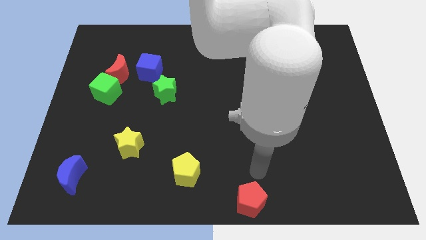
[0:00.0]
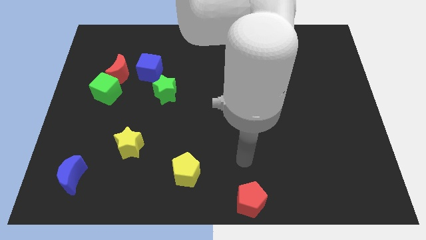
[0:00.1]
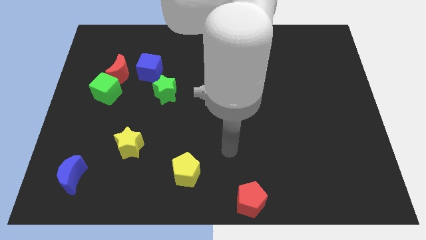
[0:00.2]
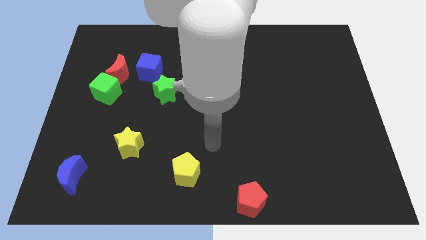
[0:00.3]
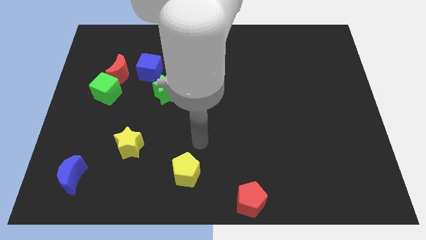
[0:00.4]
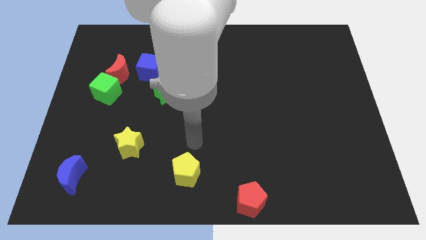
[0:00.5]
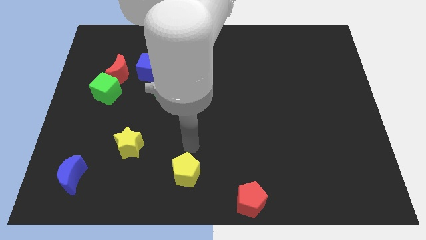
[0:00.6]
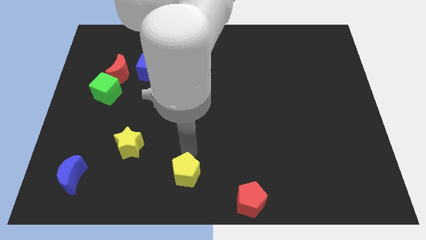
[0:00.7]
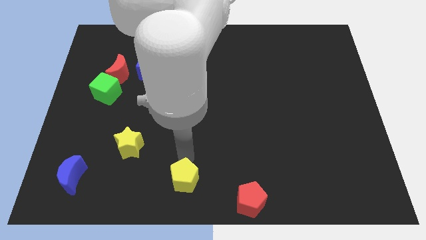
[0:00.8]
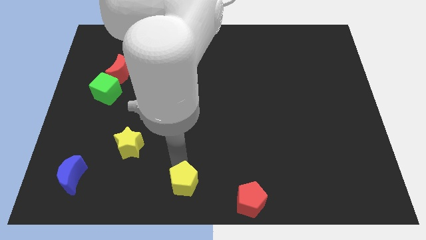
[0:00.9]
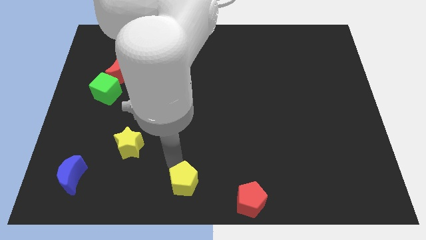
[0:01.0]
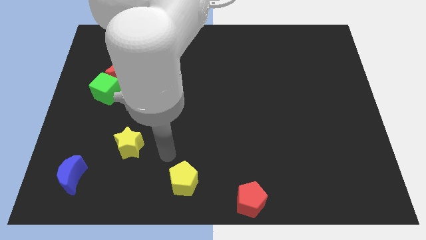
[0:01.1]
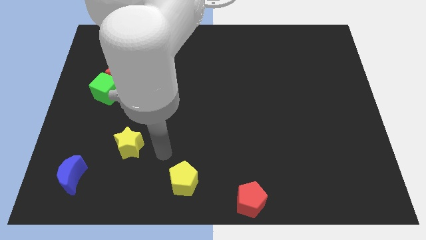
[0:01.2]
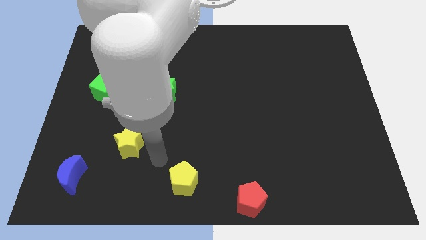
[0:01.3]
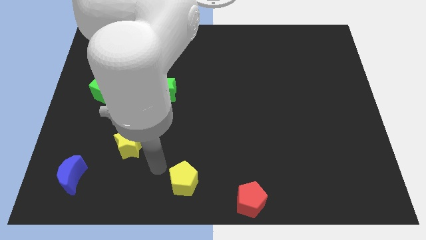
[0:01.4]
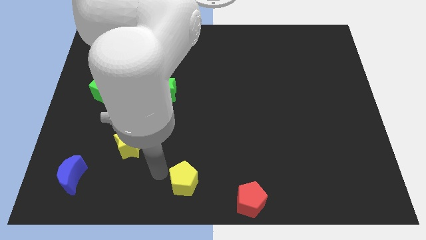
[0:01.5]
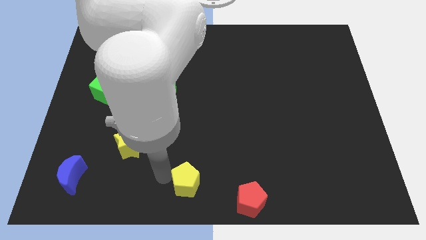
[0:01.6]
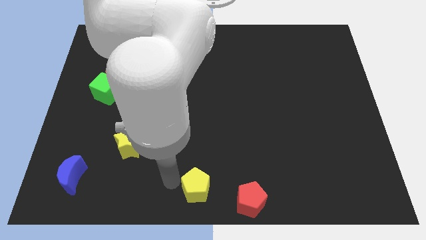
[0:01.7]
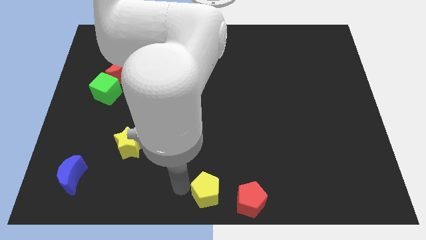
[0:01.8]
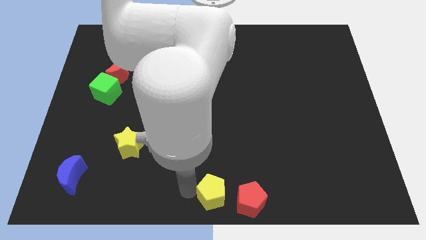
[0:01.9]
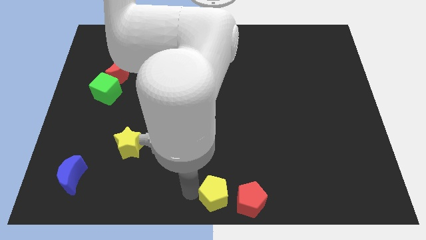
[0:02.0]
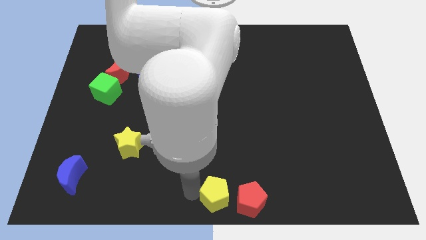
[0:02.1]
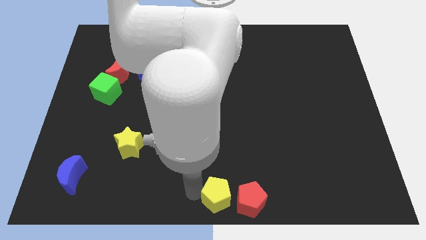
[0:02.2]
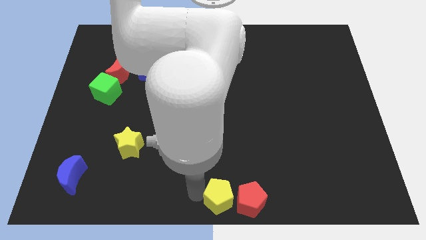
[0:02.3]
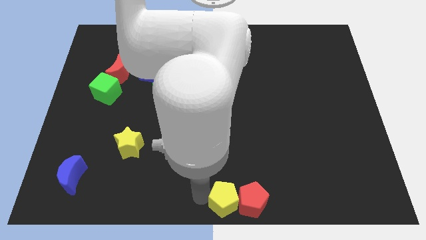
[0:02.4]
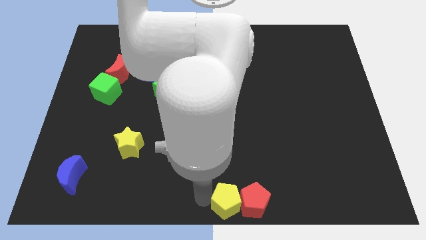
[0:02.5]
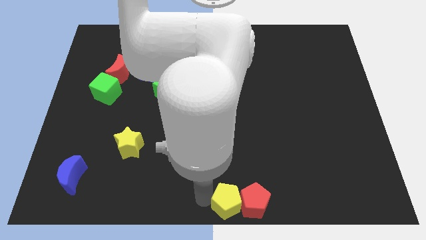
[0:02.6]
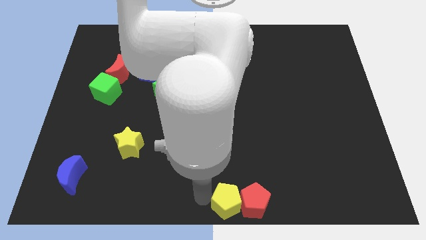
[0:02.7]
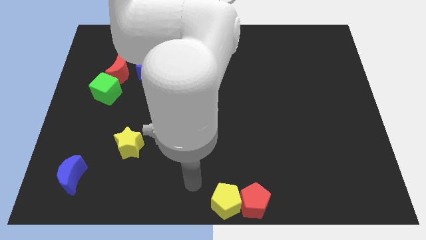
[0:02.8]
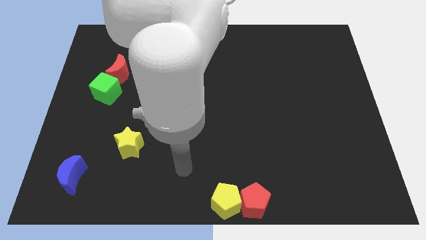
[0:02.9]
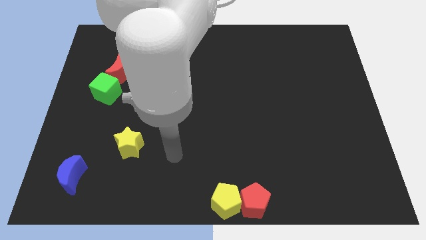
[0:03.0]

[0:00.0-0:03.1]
push the yellow pentagon into the left of red pentagon

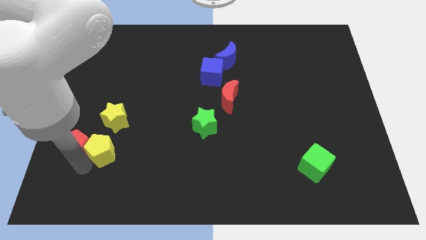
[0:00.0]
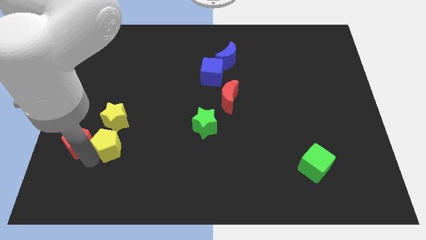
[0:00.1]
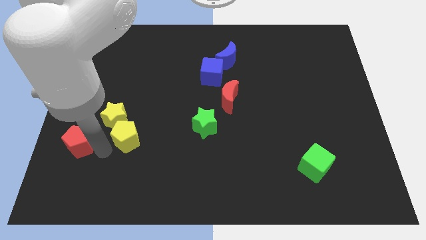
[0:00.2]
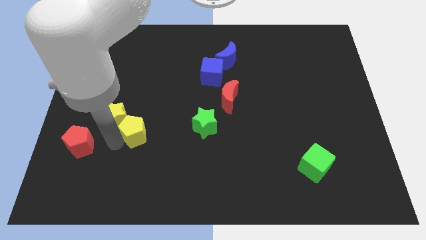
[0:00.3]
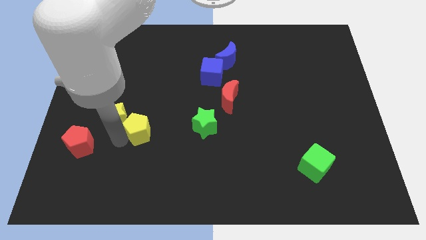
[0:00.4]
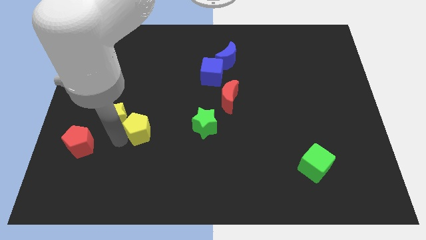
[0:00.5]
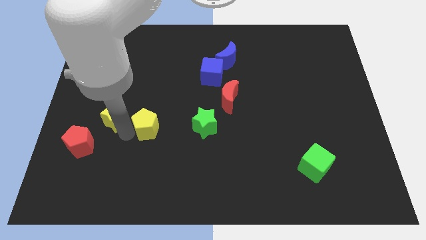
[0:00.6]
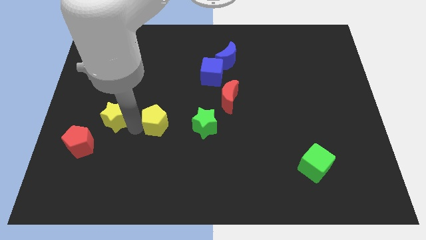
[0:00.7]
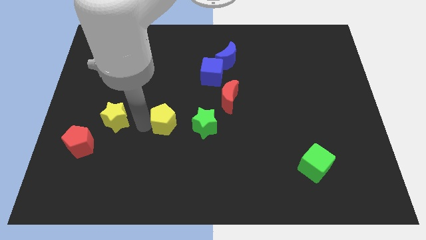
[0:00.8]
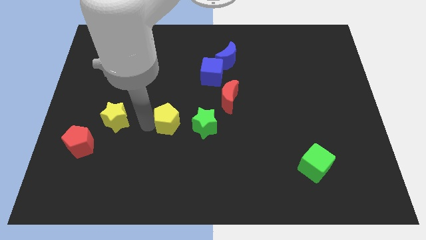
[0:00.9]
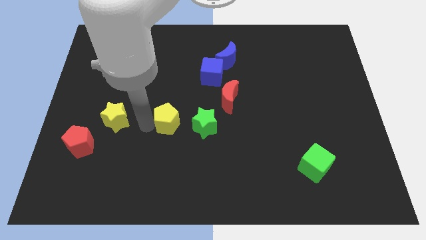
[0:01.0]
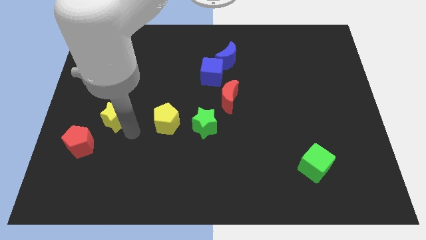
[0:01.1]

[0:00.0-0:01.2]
push the yellow pentagon to the left of the green star

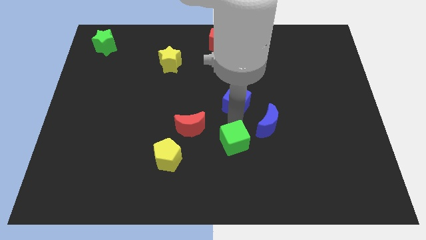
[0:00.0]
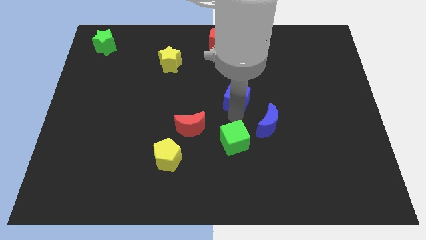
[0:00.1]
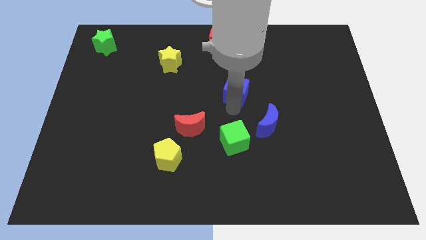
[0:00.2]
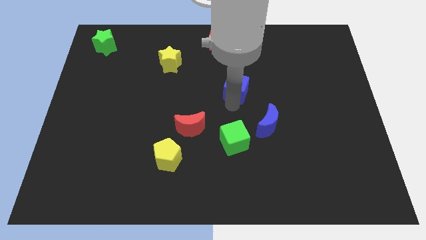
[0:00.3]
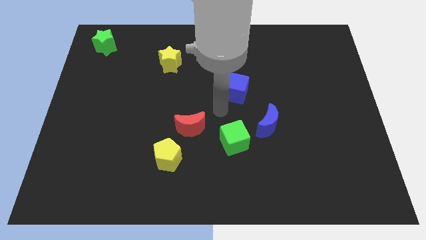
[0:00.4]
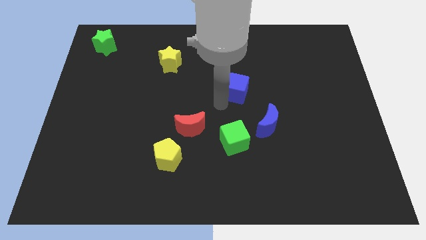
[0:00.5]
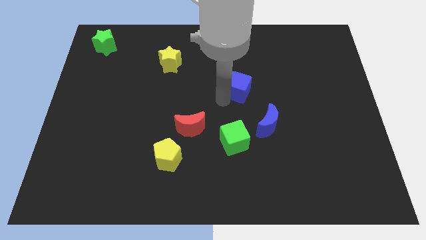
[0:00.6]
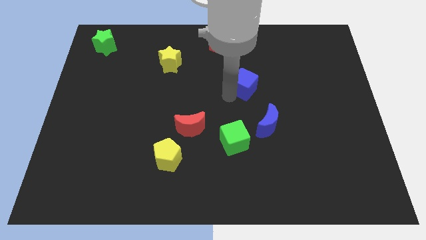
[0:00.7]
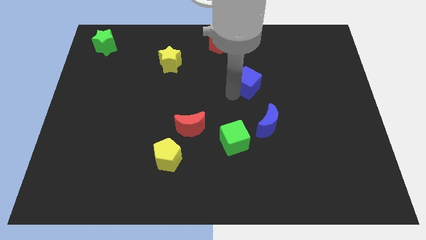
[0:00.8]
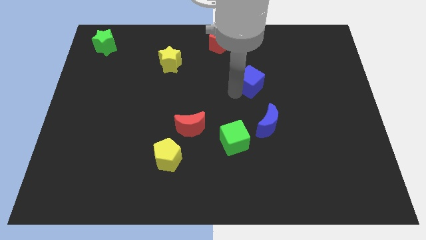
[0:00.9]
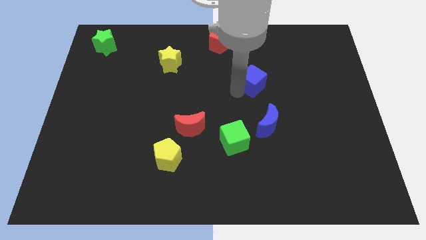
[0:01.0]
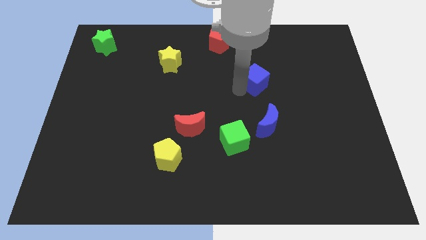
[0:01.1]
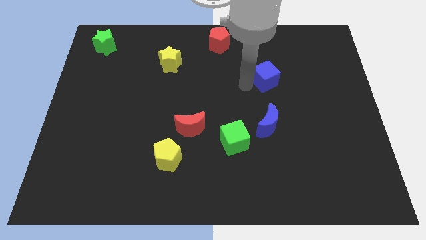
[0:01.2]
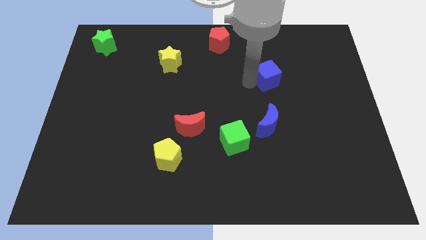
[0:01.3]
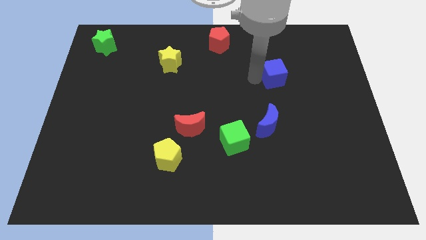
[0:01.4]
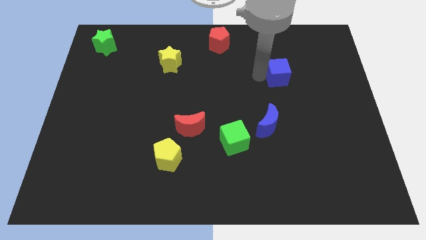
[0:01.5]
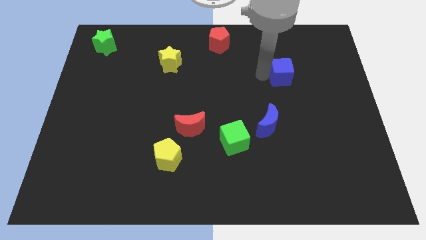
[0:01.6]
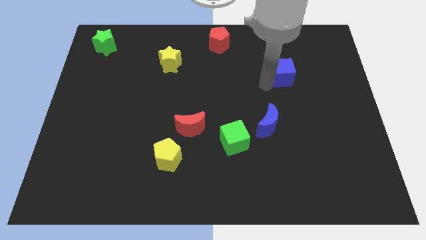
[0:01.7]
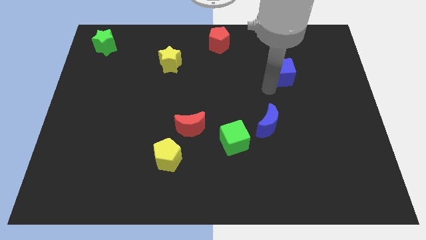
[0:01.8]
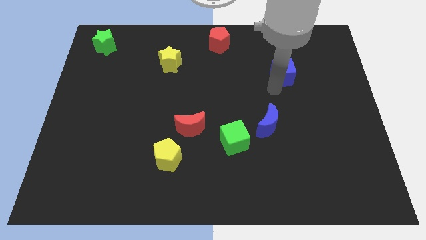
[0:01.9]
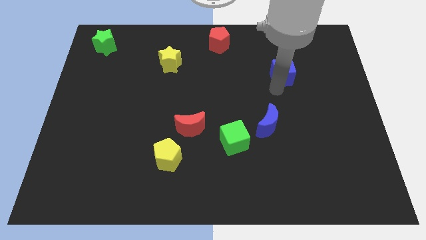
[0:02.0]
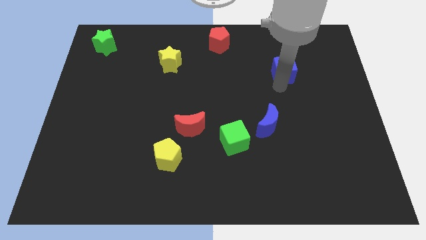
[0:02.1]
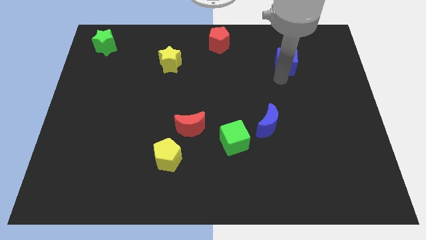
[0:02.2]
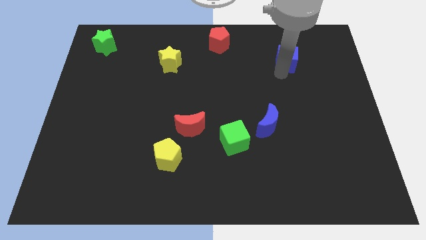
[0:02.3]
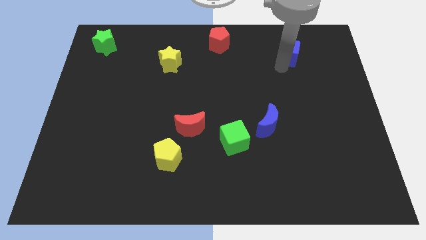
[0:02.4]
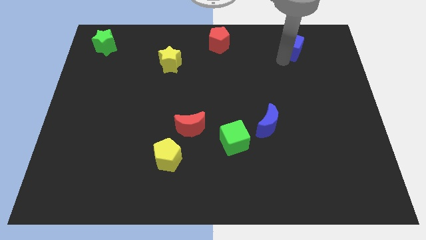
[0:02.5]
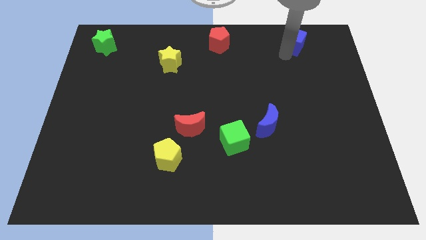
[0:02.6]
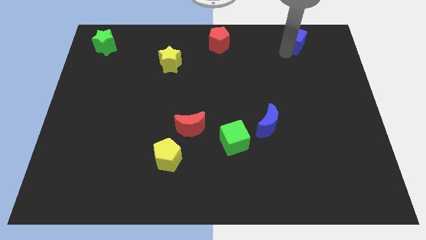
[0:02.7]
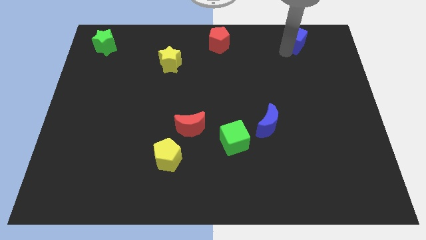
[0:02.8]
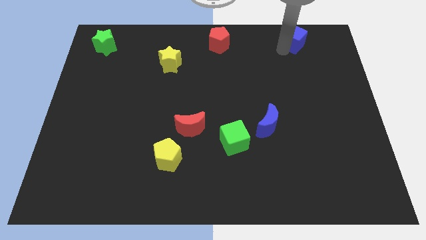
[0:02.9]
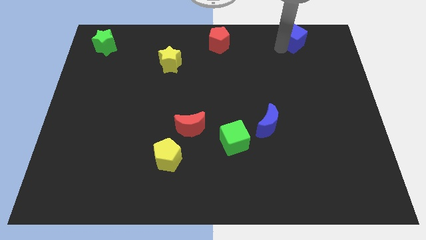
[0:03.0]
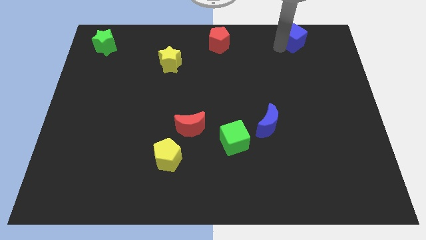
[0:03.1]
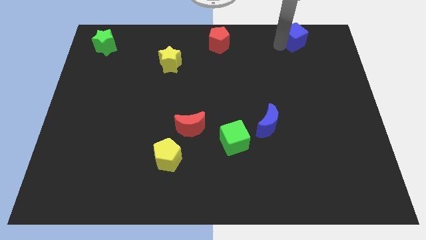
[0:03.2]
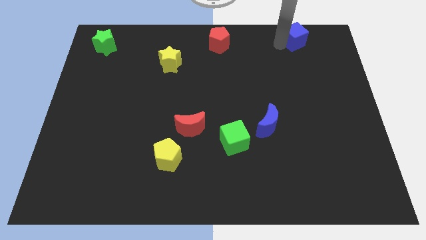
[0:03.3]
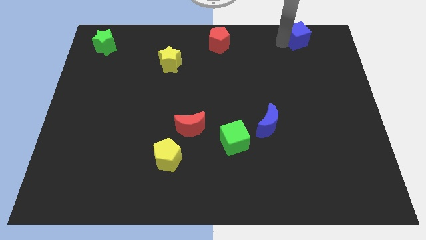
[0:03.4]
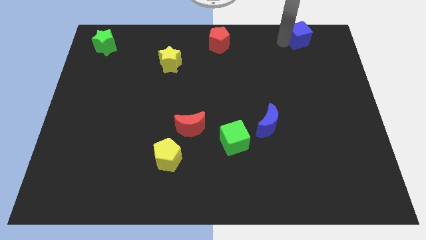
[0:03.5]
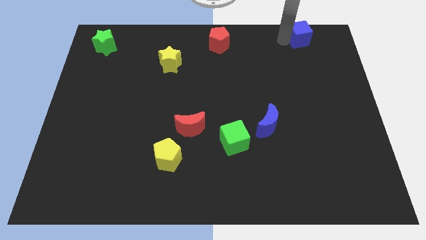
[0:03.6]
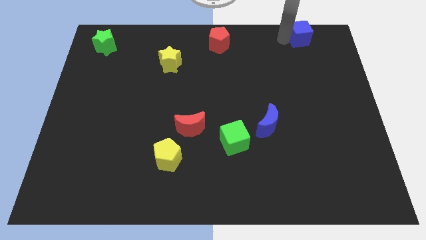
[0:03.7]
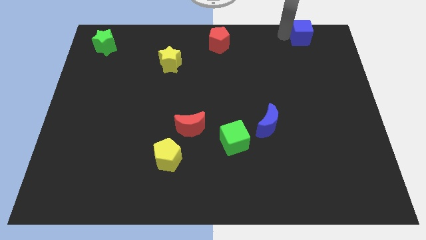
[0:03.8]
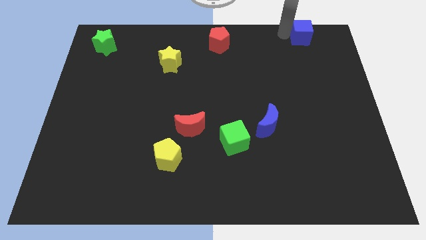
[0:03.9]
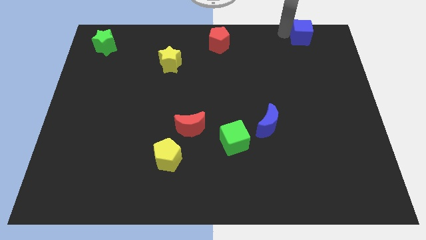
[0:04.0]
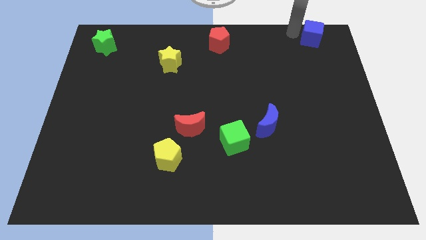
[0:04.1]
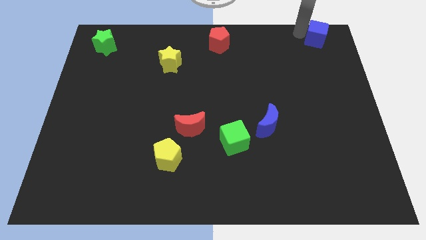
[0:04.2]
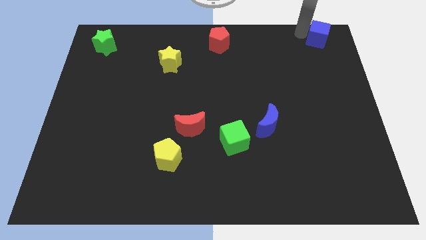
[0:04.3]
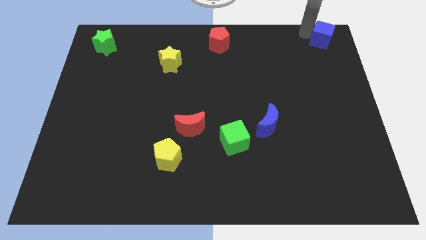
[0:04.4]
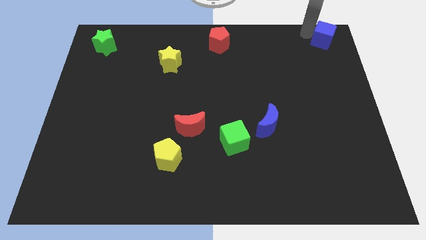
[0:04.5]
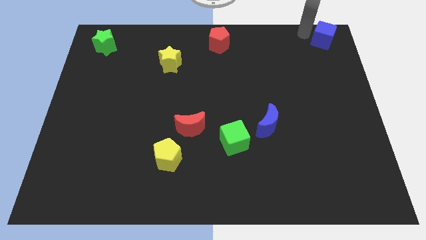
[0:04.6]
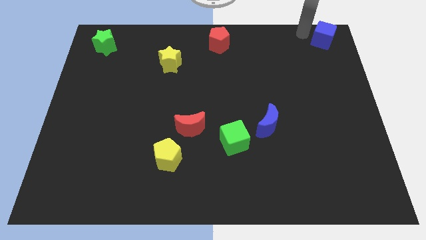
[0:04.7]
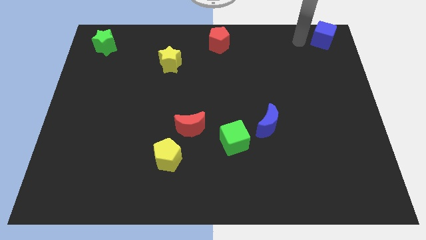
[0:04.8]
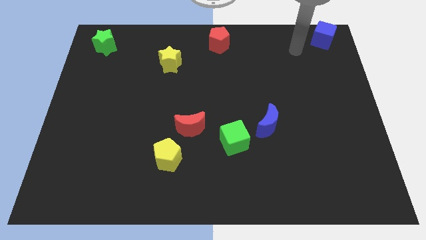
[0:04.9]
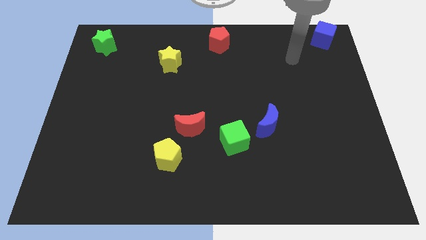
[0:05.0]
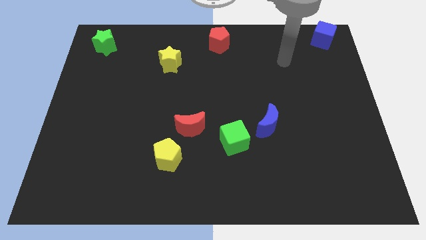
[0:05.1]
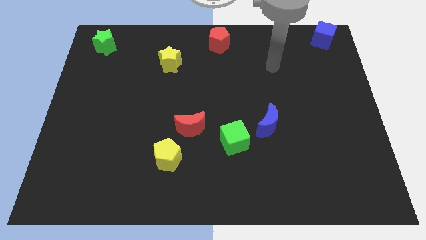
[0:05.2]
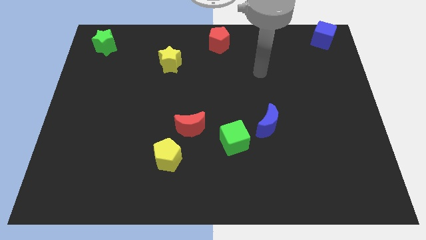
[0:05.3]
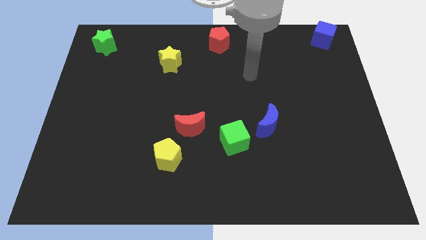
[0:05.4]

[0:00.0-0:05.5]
place the blue cube towards the right side of the board
